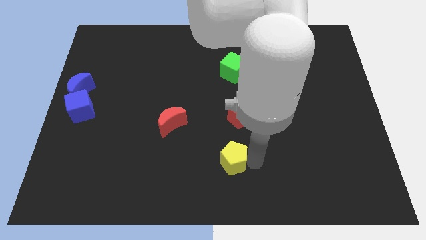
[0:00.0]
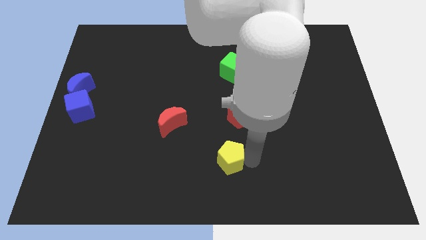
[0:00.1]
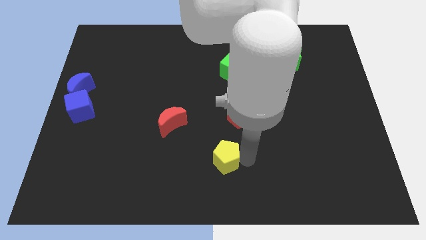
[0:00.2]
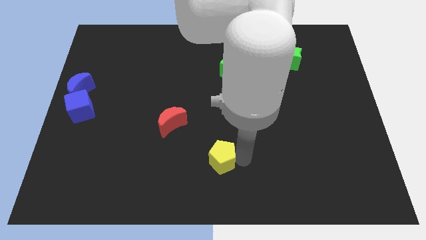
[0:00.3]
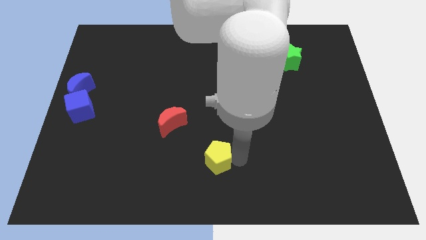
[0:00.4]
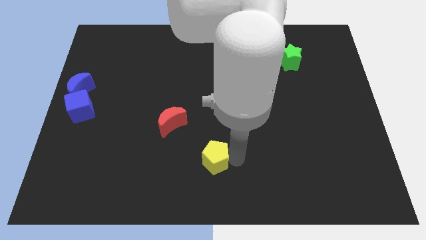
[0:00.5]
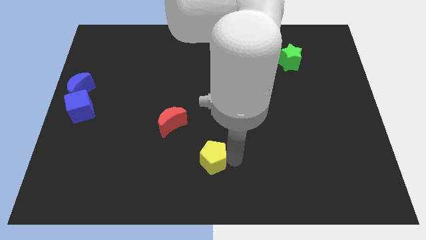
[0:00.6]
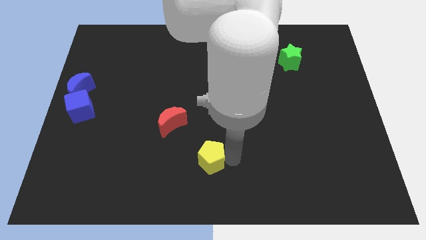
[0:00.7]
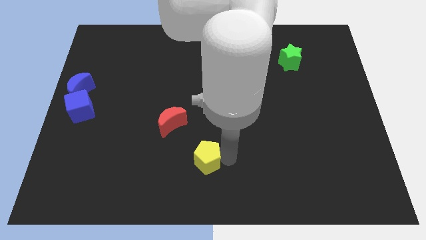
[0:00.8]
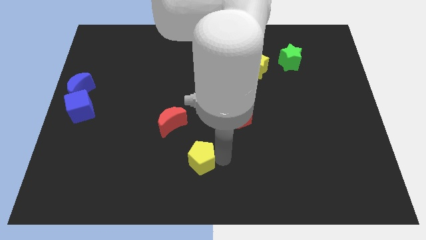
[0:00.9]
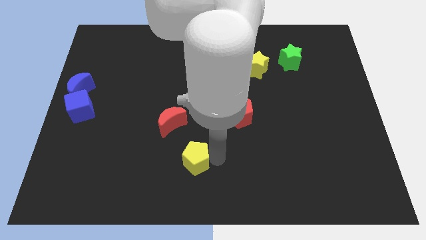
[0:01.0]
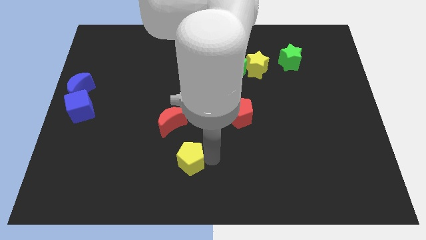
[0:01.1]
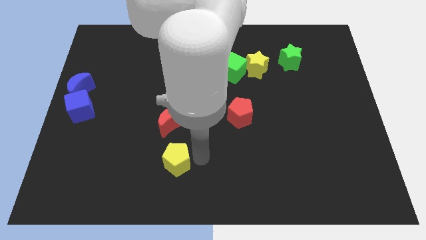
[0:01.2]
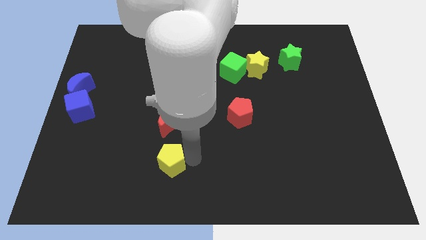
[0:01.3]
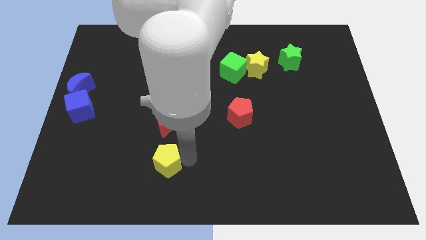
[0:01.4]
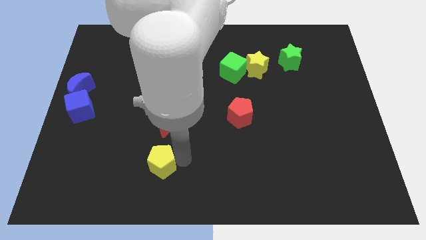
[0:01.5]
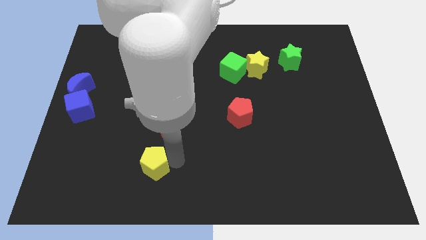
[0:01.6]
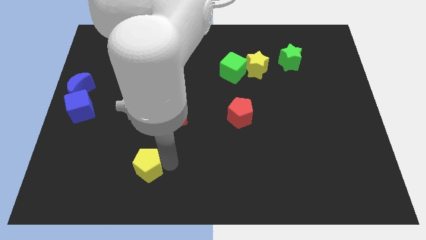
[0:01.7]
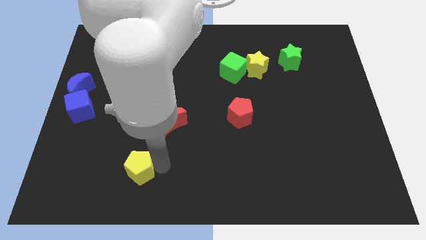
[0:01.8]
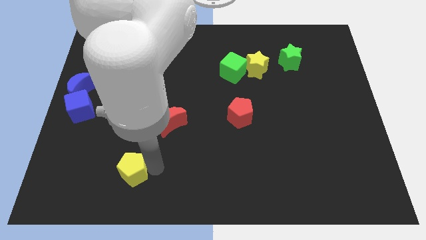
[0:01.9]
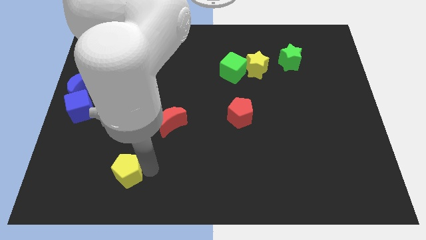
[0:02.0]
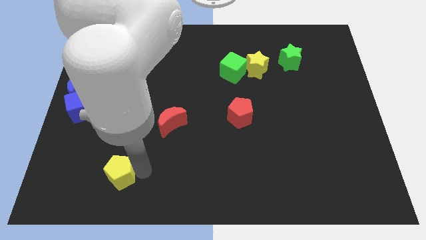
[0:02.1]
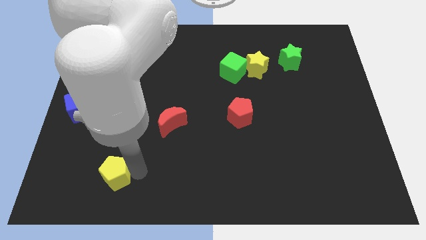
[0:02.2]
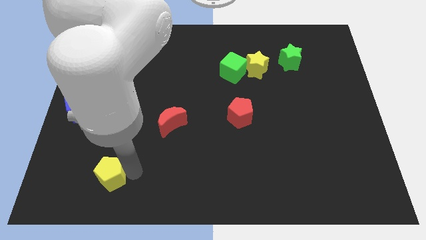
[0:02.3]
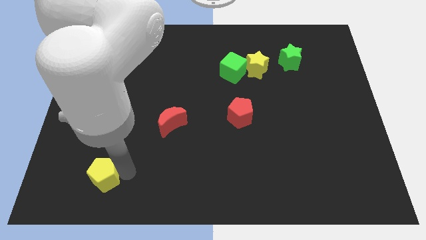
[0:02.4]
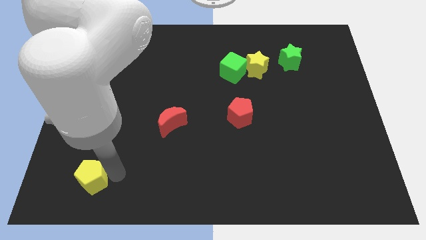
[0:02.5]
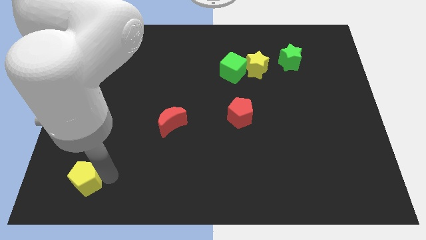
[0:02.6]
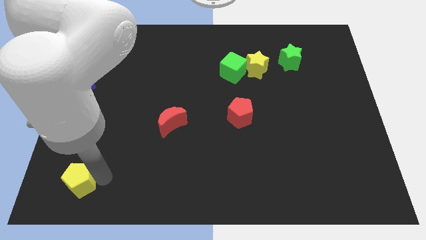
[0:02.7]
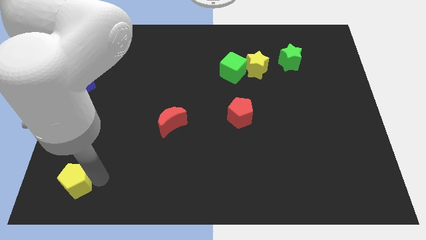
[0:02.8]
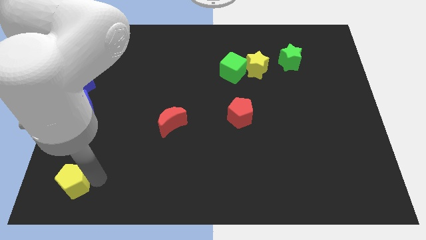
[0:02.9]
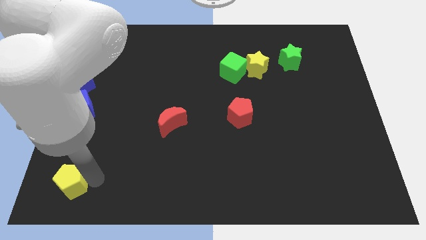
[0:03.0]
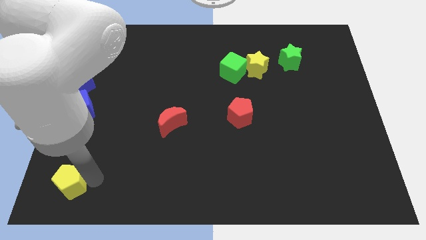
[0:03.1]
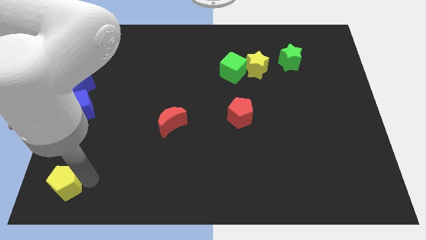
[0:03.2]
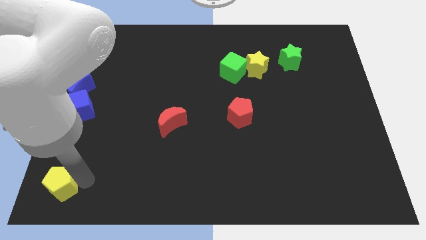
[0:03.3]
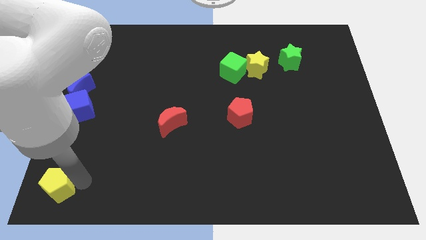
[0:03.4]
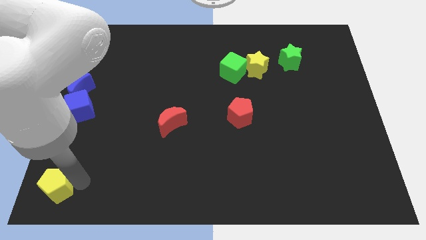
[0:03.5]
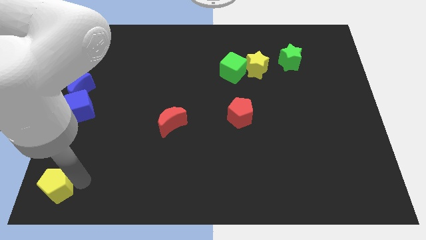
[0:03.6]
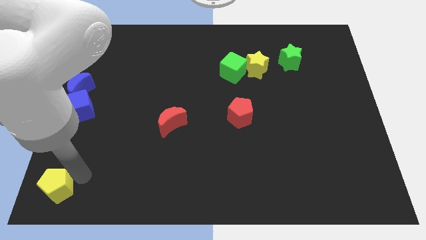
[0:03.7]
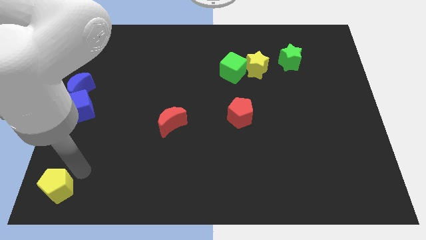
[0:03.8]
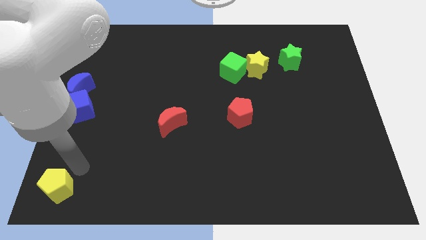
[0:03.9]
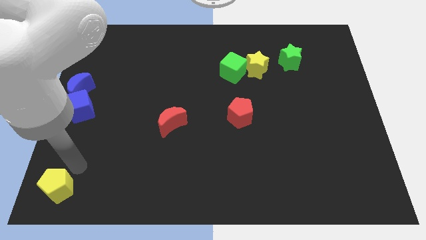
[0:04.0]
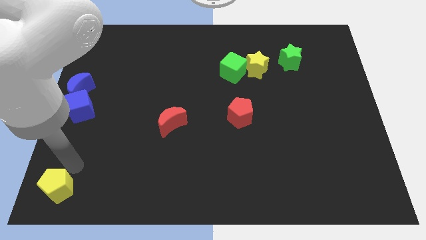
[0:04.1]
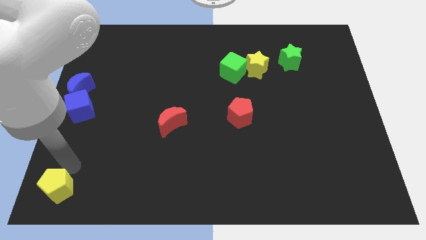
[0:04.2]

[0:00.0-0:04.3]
push the yellow pentagon to the bottom left

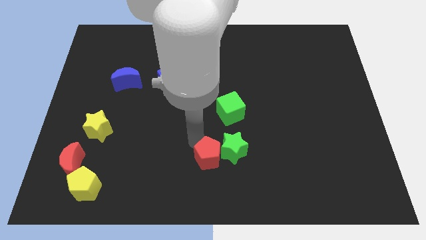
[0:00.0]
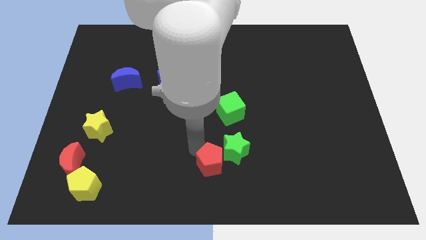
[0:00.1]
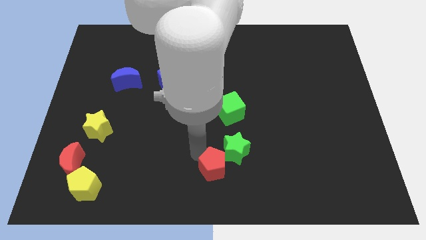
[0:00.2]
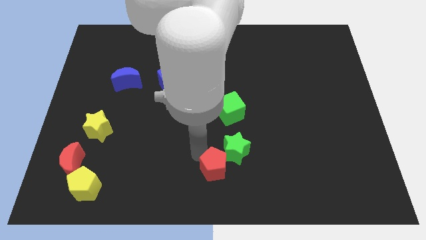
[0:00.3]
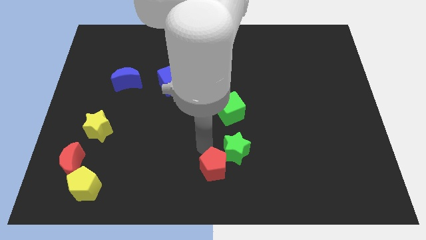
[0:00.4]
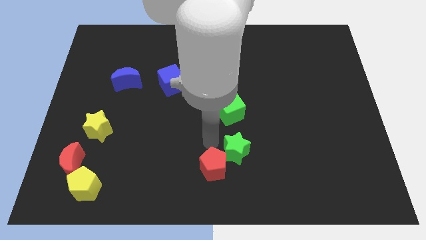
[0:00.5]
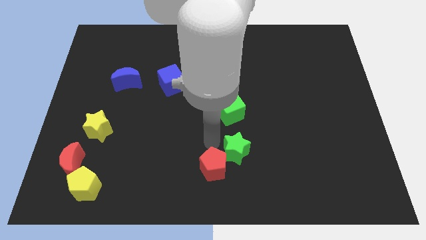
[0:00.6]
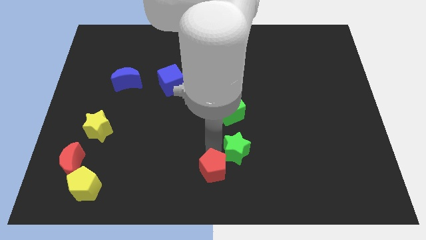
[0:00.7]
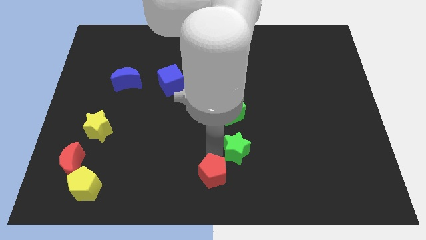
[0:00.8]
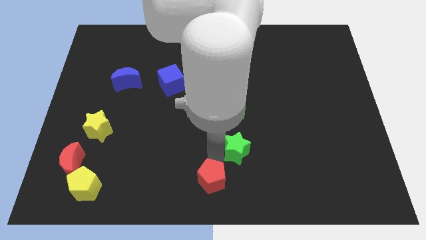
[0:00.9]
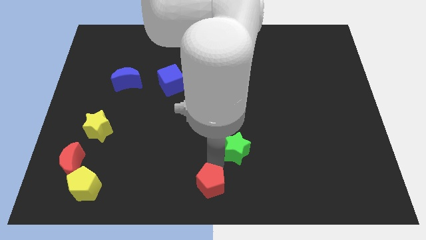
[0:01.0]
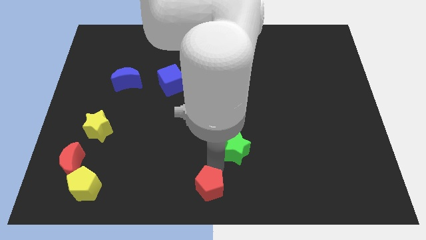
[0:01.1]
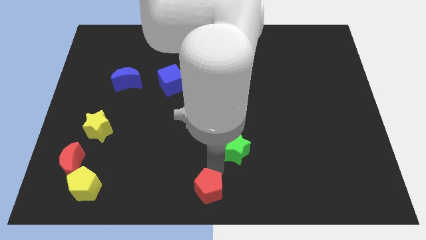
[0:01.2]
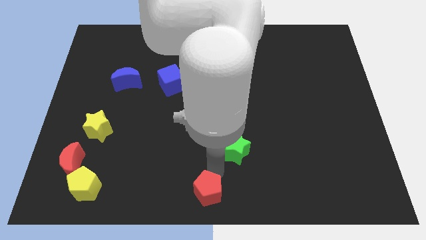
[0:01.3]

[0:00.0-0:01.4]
separate the red pentagon away from the green star

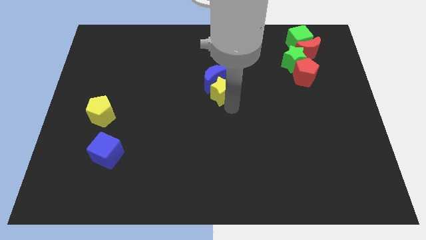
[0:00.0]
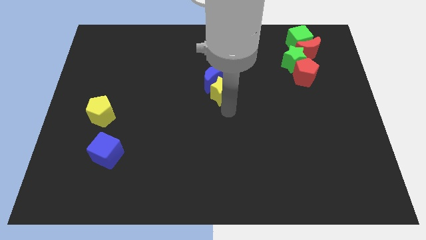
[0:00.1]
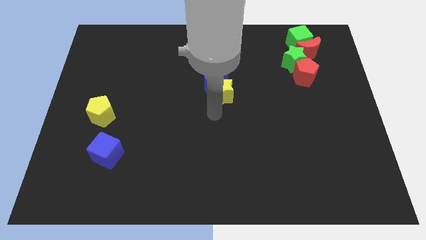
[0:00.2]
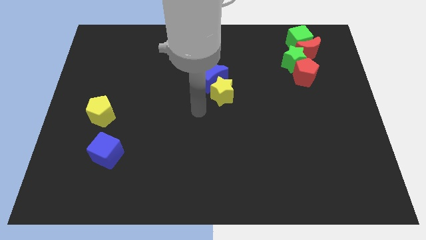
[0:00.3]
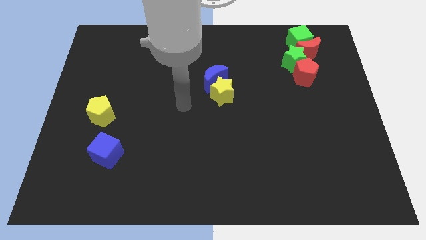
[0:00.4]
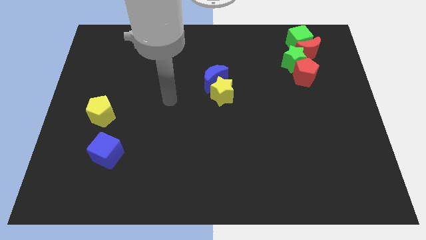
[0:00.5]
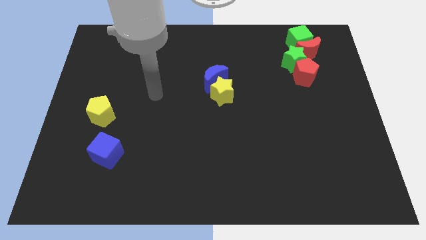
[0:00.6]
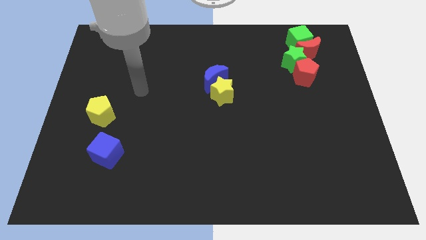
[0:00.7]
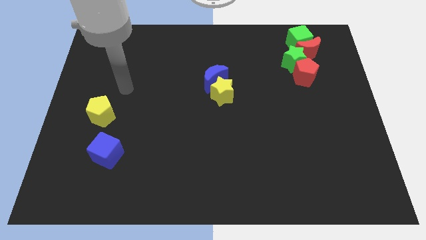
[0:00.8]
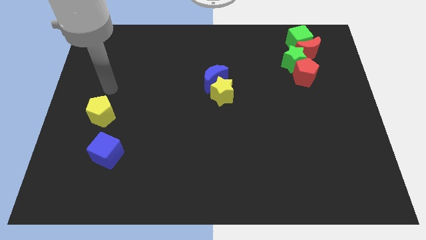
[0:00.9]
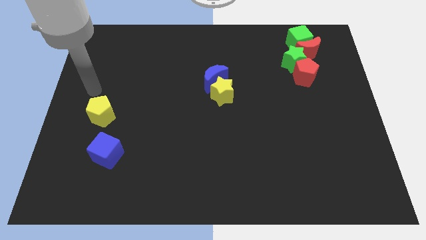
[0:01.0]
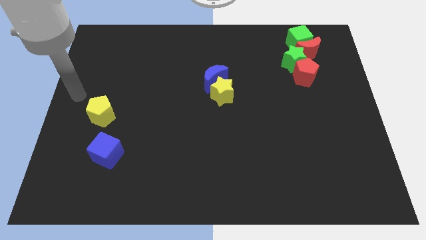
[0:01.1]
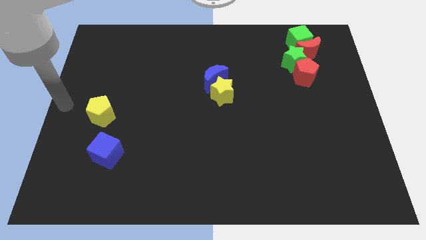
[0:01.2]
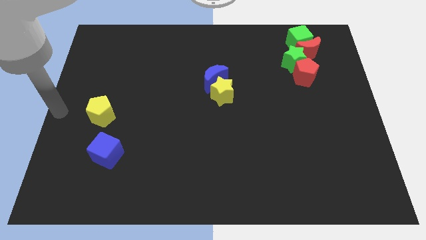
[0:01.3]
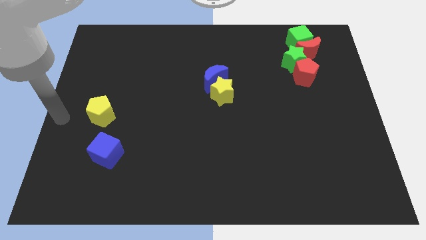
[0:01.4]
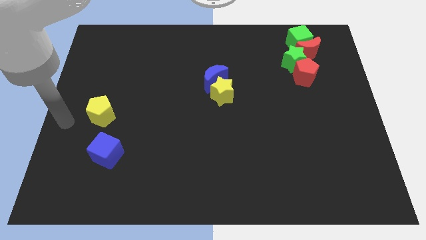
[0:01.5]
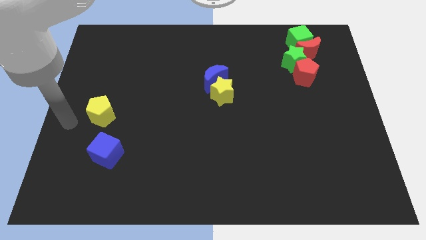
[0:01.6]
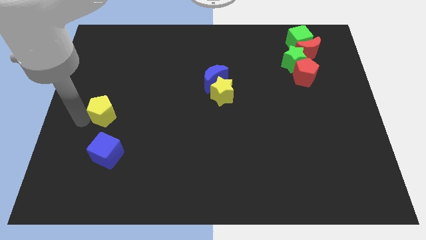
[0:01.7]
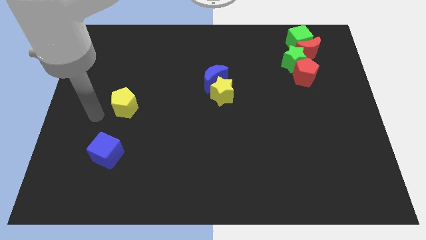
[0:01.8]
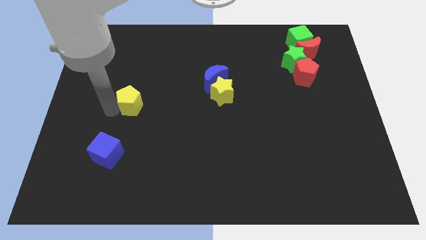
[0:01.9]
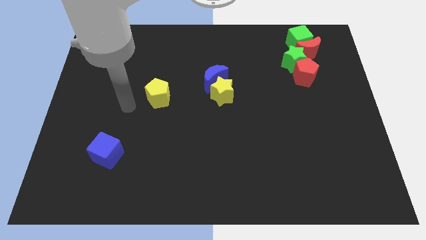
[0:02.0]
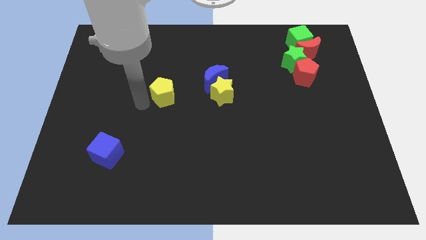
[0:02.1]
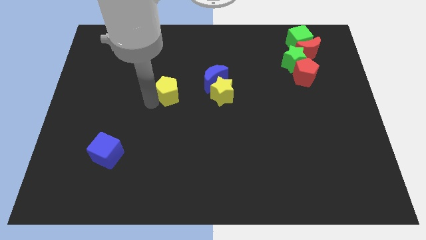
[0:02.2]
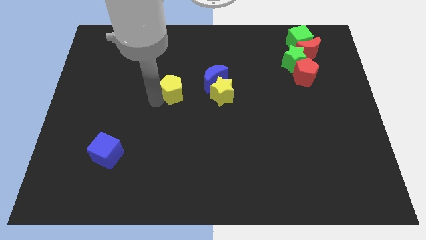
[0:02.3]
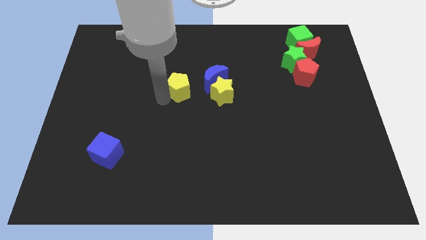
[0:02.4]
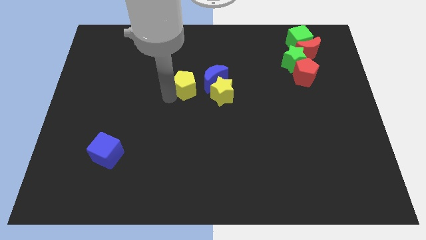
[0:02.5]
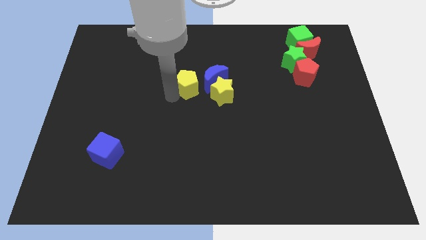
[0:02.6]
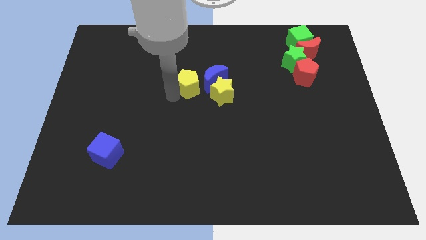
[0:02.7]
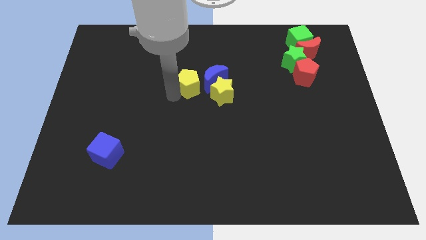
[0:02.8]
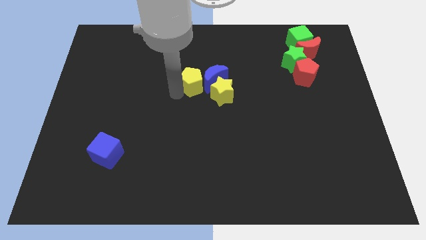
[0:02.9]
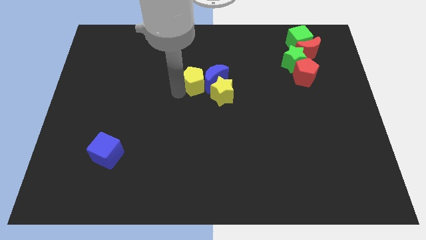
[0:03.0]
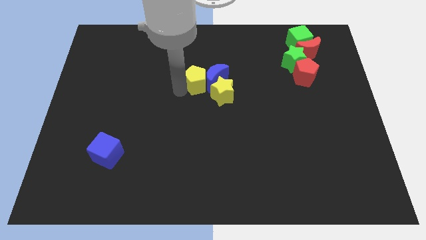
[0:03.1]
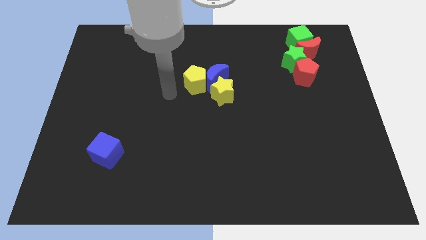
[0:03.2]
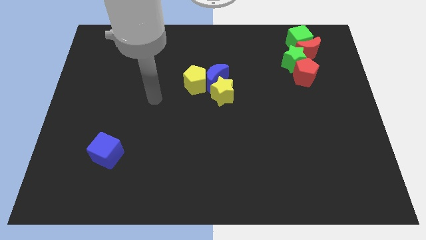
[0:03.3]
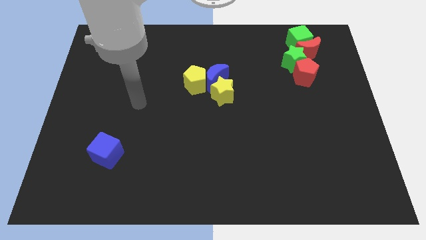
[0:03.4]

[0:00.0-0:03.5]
move the yellow pentagon to the left side of the blue crescent
